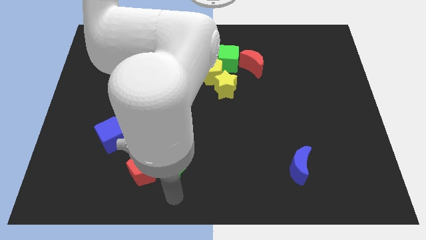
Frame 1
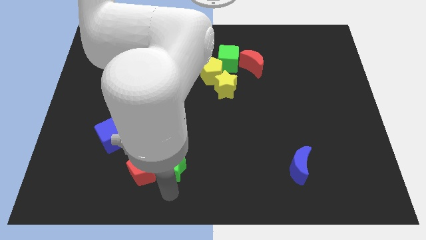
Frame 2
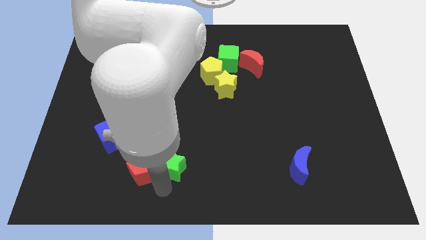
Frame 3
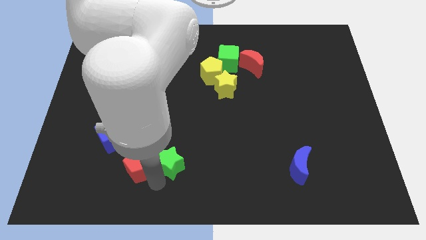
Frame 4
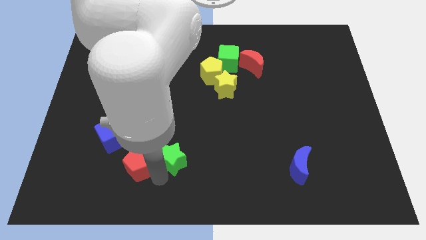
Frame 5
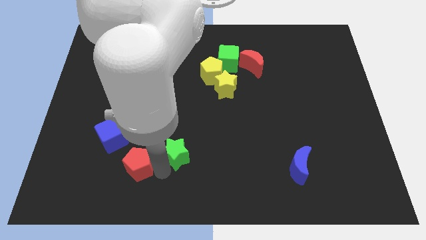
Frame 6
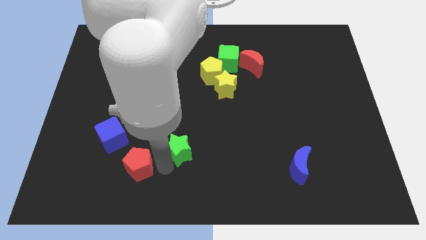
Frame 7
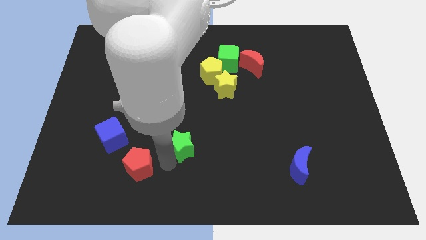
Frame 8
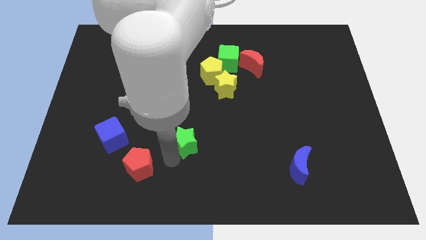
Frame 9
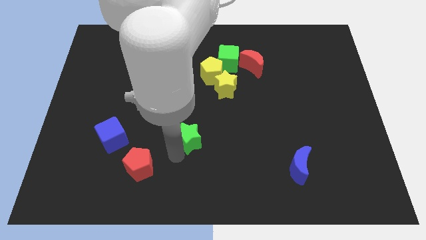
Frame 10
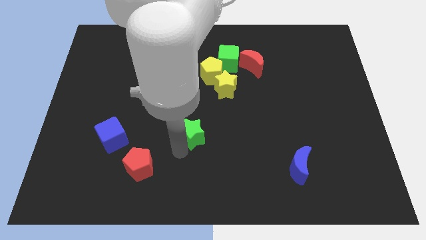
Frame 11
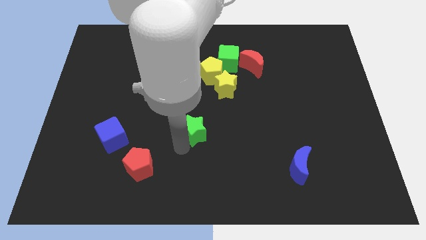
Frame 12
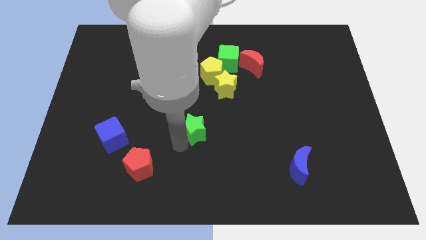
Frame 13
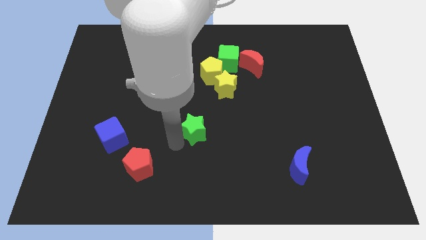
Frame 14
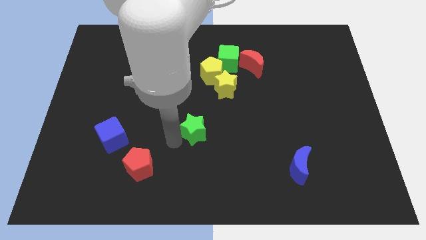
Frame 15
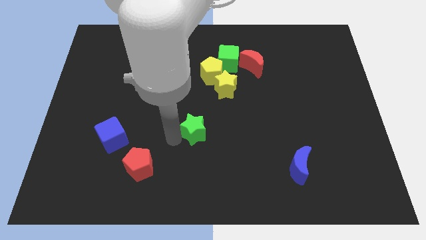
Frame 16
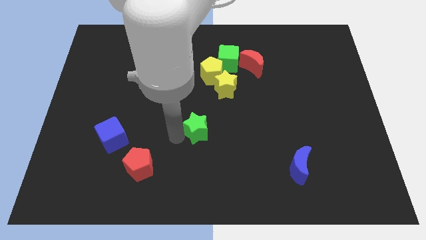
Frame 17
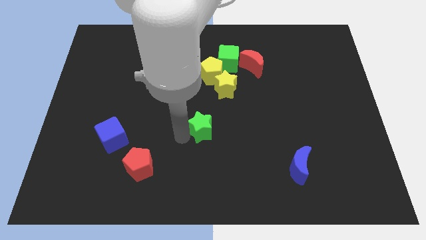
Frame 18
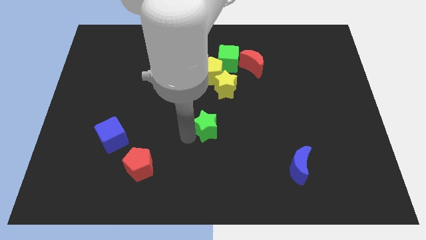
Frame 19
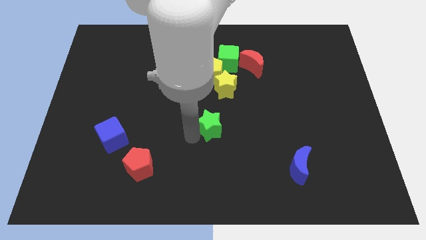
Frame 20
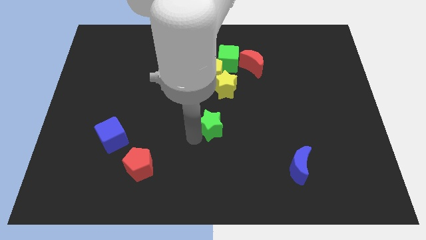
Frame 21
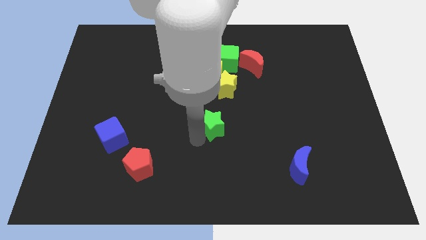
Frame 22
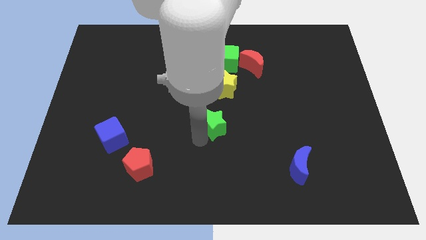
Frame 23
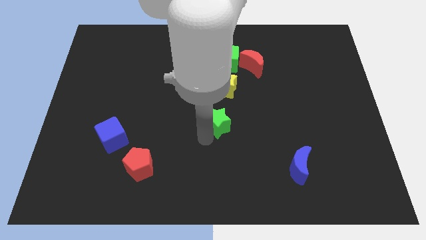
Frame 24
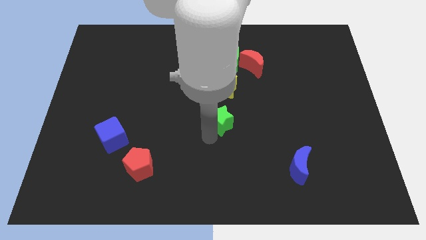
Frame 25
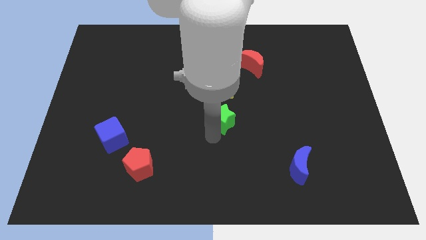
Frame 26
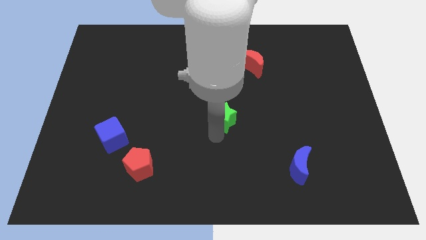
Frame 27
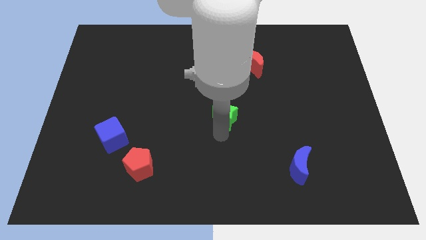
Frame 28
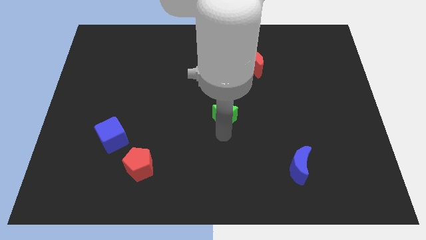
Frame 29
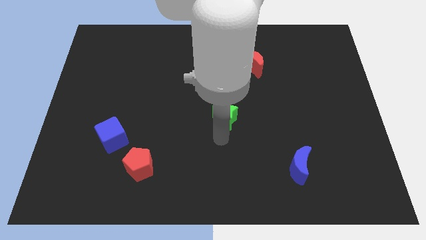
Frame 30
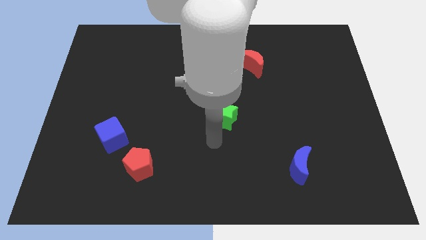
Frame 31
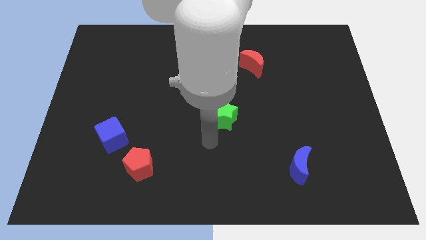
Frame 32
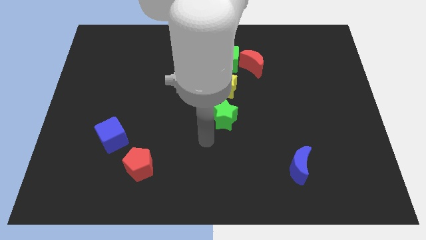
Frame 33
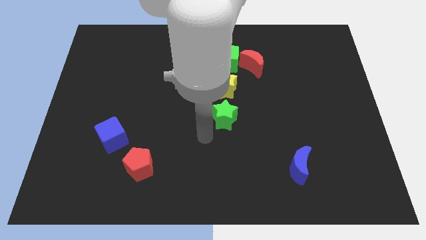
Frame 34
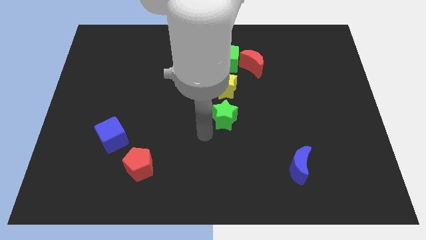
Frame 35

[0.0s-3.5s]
place the green star below the yellow star

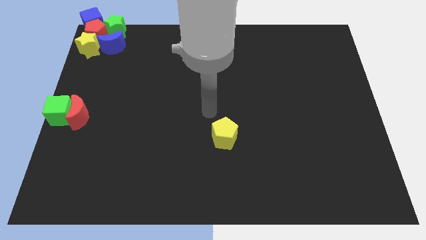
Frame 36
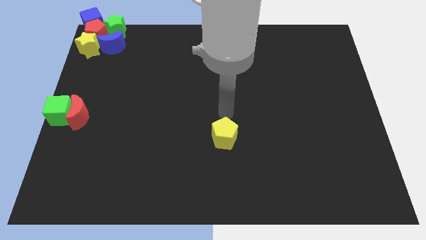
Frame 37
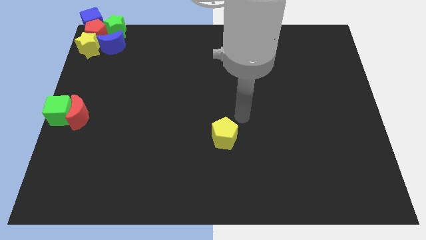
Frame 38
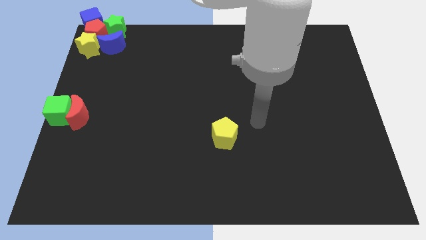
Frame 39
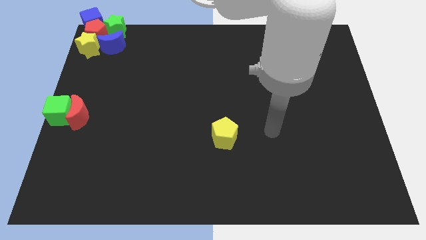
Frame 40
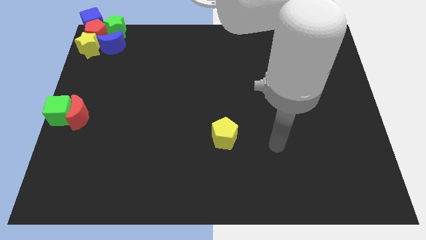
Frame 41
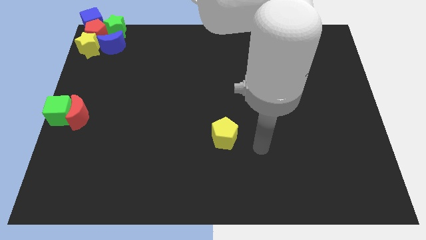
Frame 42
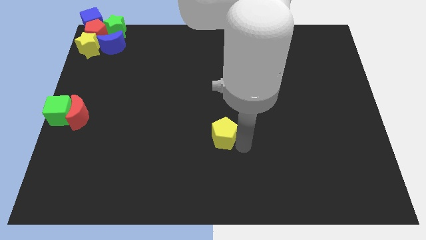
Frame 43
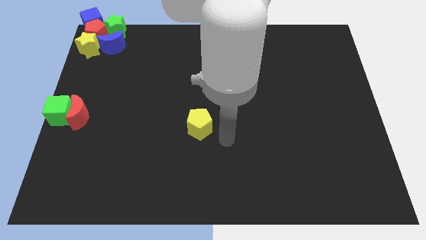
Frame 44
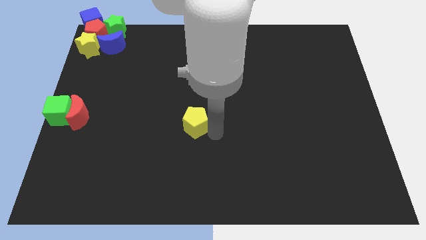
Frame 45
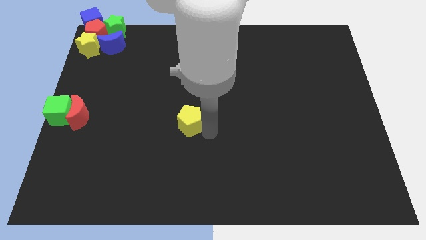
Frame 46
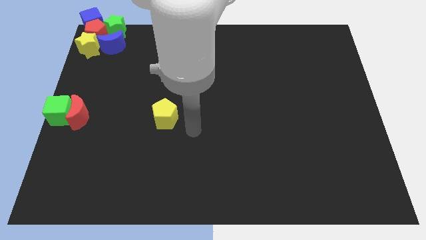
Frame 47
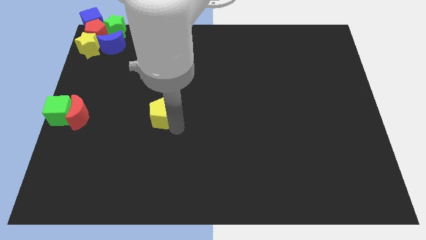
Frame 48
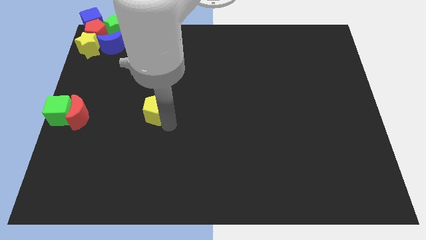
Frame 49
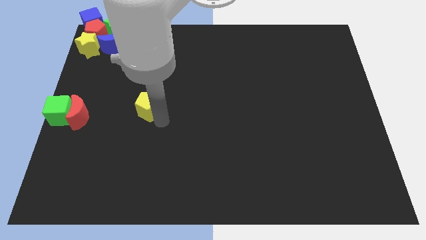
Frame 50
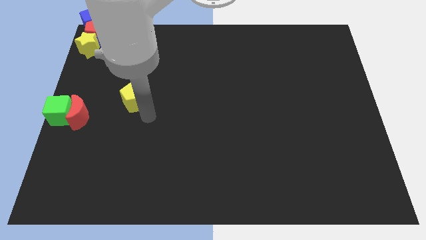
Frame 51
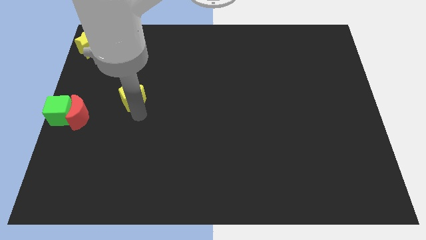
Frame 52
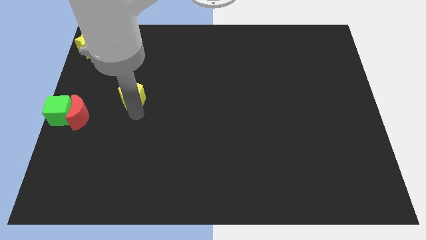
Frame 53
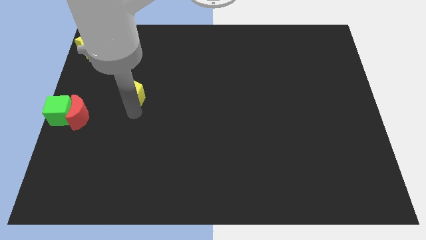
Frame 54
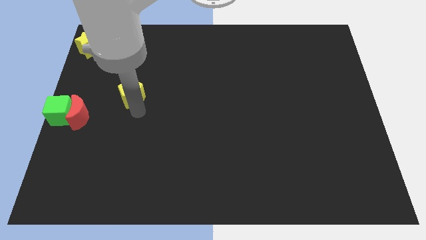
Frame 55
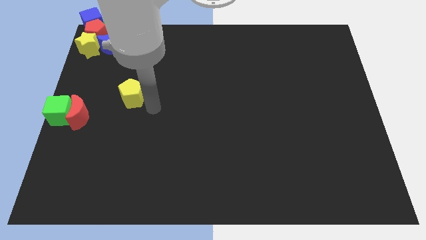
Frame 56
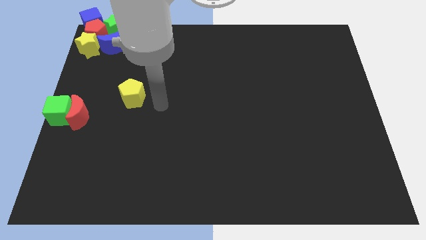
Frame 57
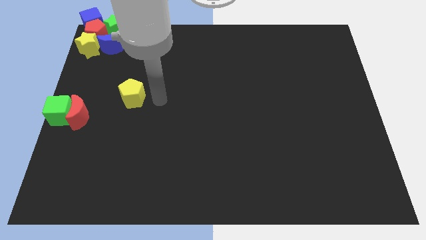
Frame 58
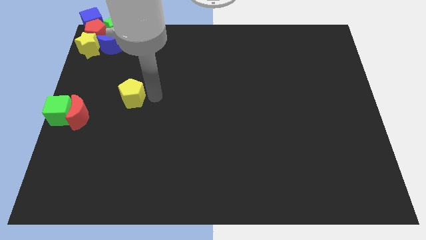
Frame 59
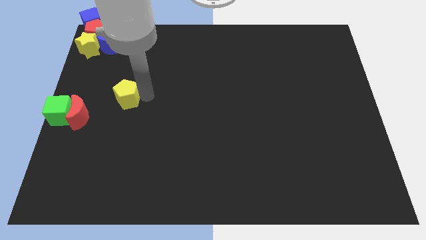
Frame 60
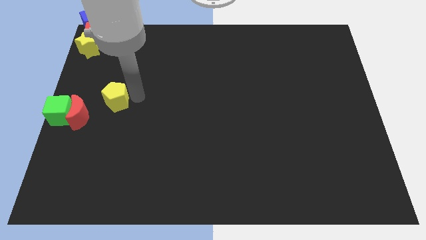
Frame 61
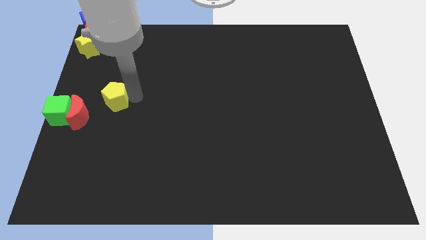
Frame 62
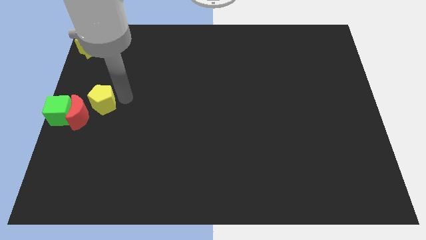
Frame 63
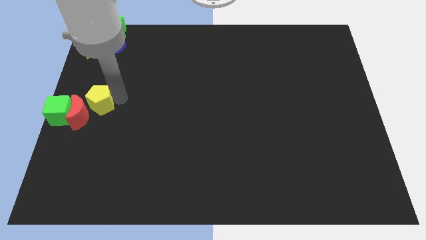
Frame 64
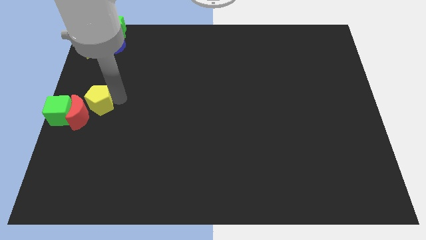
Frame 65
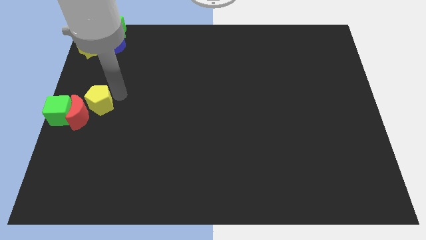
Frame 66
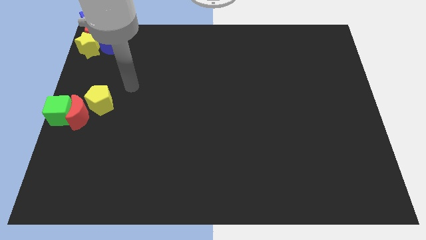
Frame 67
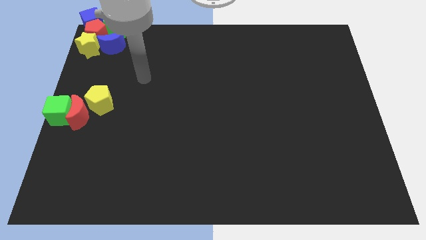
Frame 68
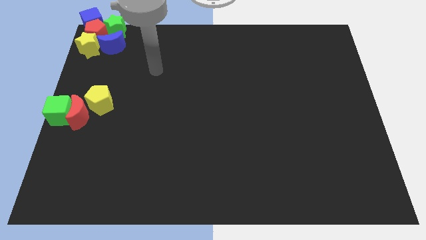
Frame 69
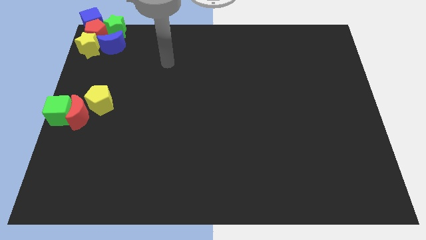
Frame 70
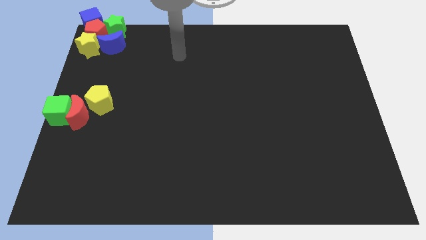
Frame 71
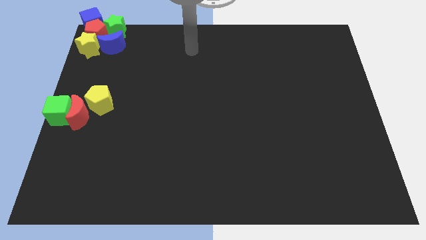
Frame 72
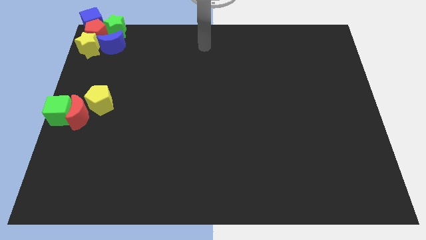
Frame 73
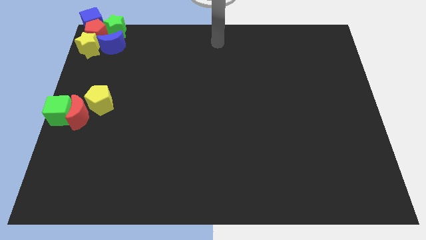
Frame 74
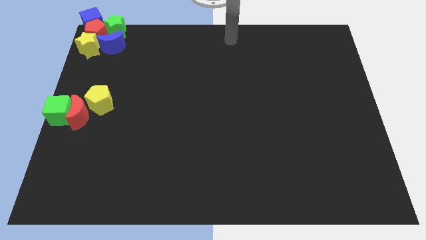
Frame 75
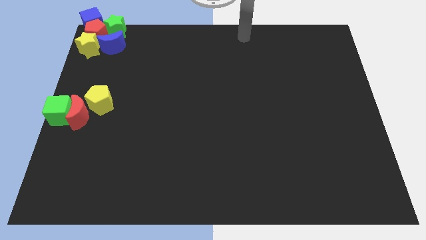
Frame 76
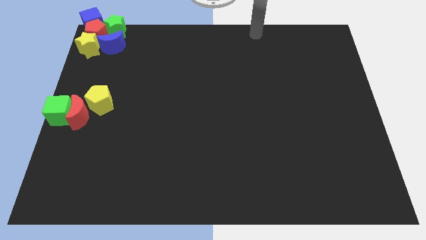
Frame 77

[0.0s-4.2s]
push the yellow pentagon towards the top right side of the red crescent

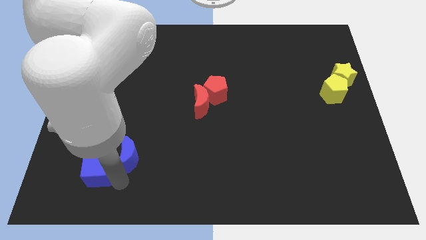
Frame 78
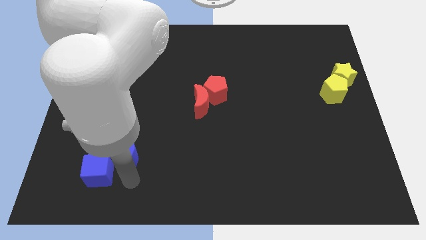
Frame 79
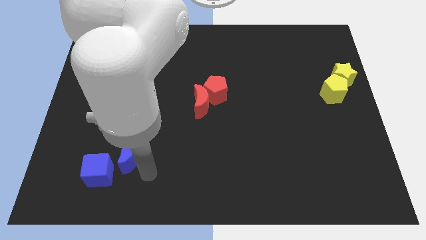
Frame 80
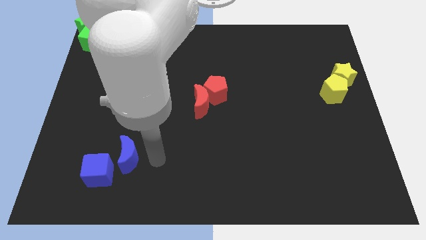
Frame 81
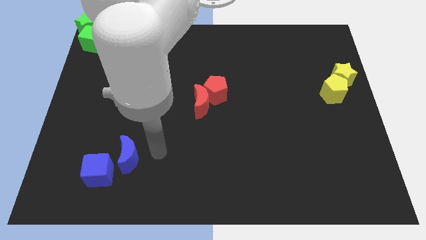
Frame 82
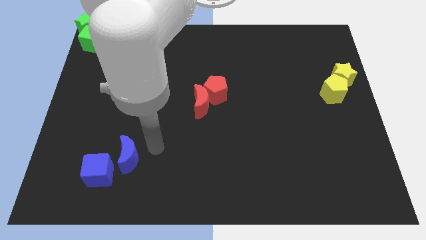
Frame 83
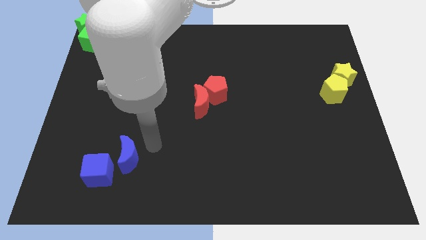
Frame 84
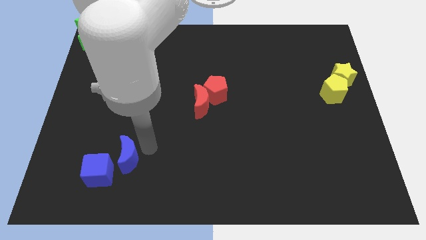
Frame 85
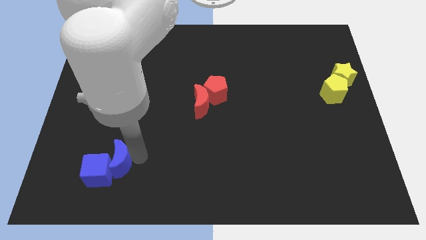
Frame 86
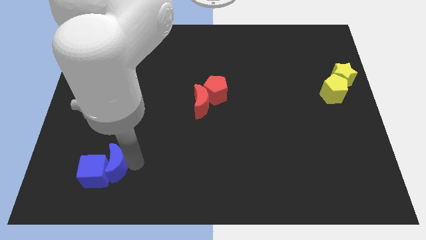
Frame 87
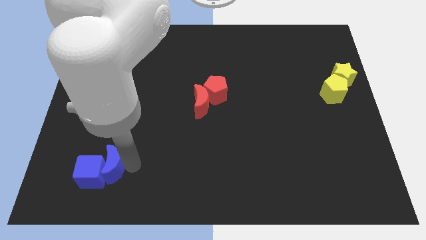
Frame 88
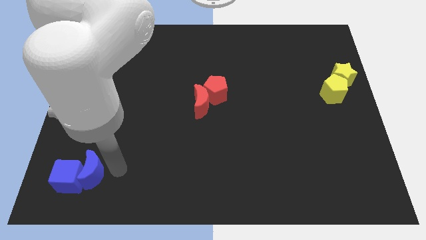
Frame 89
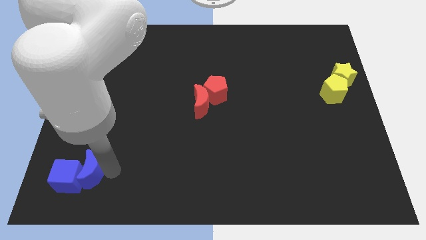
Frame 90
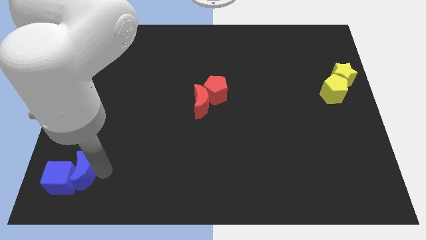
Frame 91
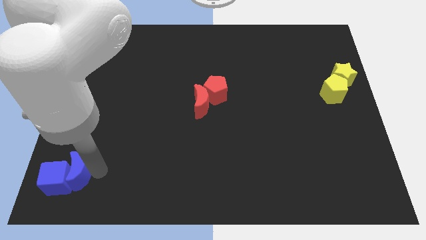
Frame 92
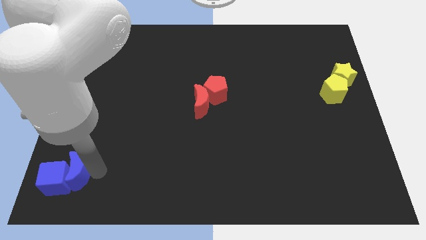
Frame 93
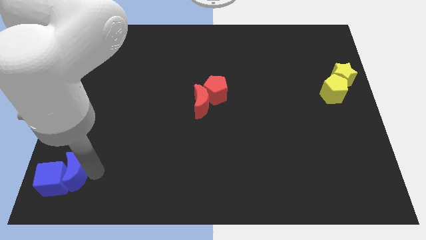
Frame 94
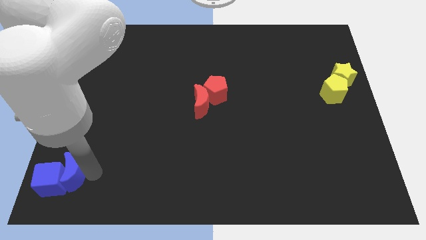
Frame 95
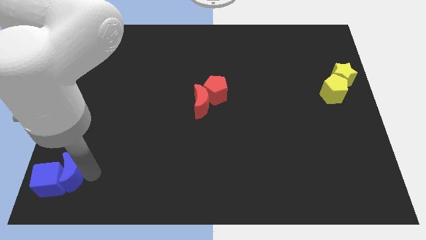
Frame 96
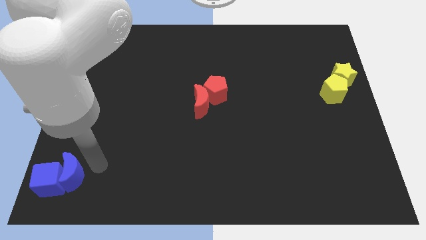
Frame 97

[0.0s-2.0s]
push the blue cube to the left bottom of the board with the blue crescent
